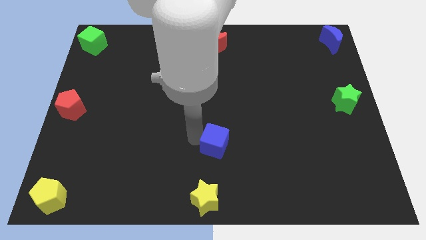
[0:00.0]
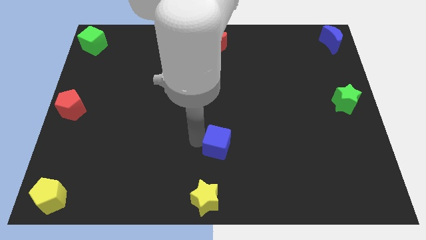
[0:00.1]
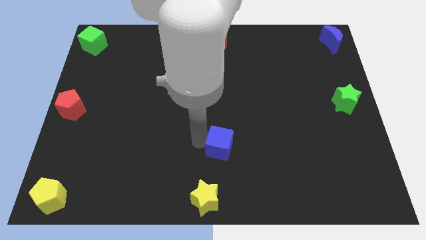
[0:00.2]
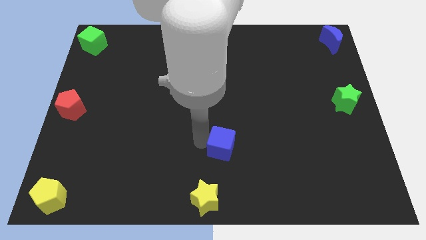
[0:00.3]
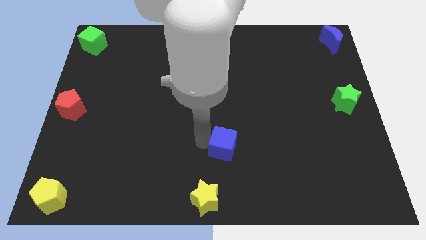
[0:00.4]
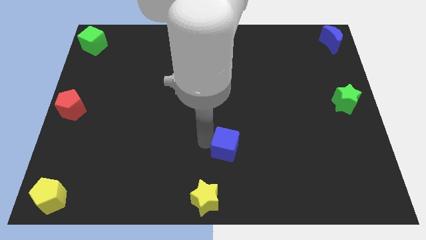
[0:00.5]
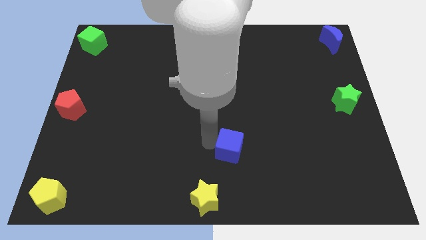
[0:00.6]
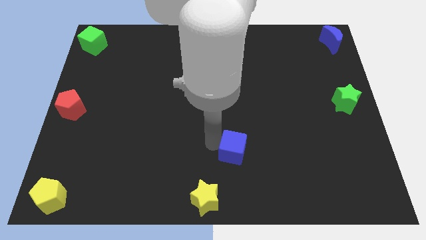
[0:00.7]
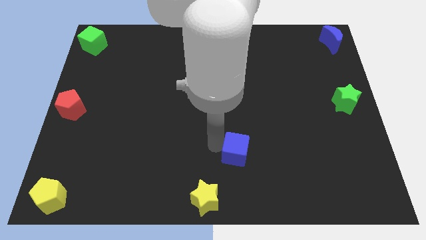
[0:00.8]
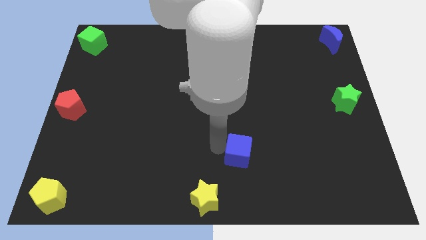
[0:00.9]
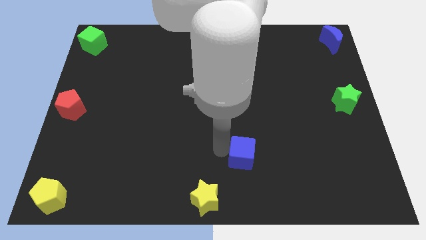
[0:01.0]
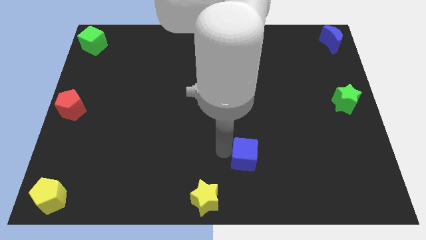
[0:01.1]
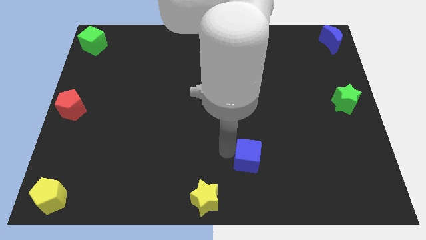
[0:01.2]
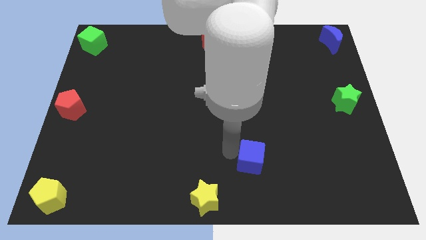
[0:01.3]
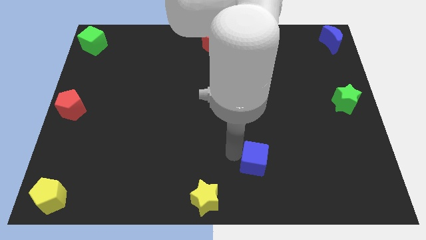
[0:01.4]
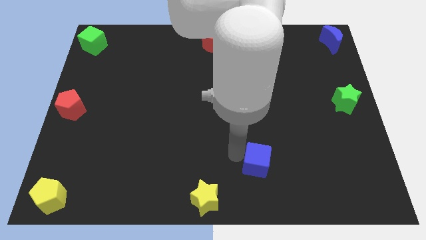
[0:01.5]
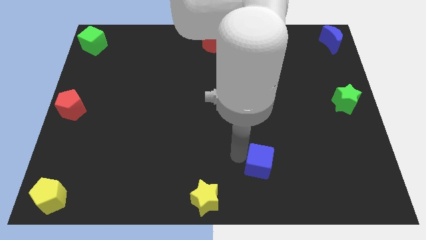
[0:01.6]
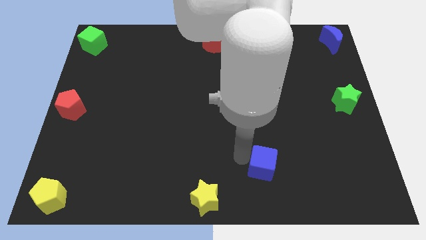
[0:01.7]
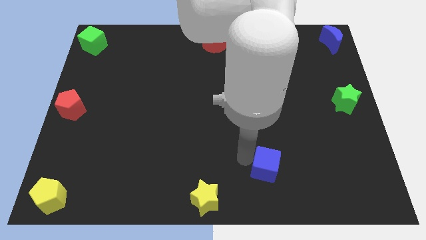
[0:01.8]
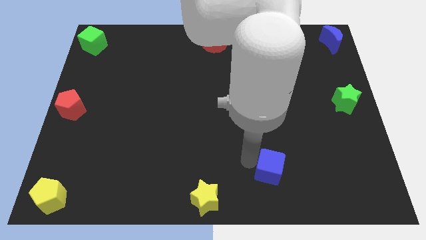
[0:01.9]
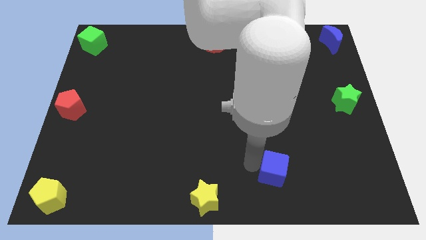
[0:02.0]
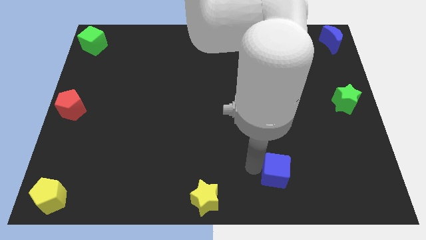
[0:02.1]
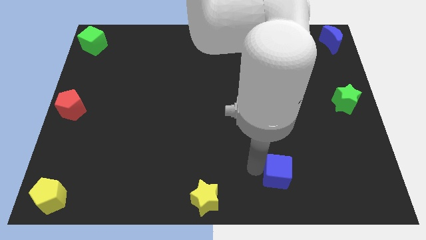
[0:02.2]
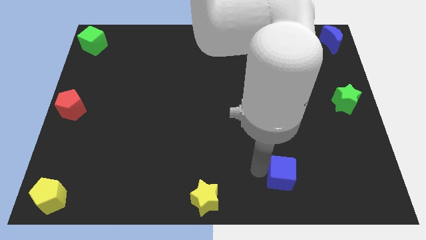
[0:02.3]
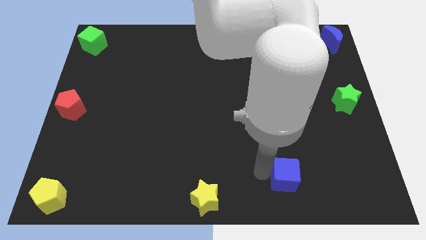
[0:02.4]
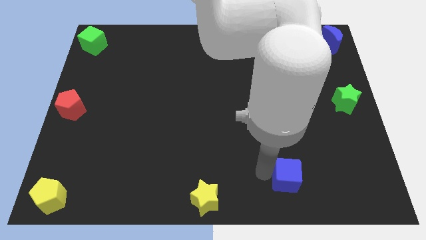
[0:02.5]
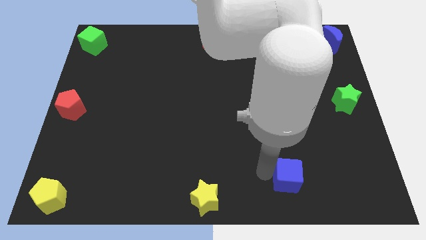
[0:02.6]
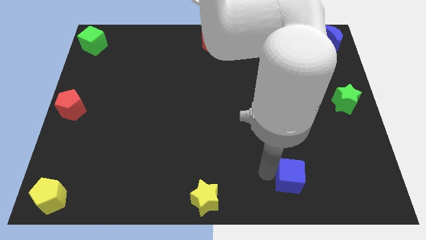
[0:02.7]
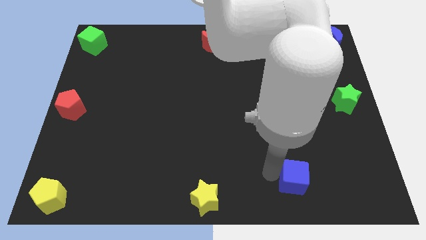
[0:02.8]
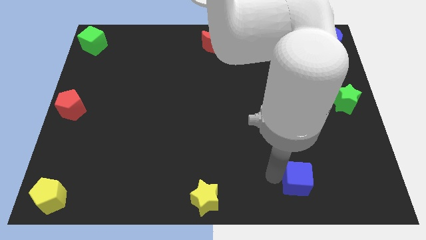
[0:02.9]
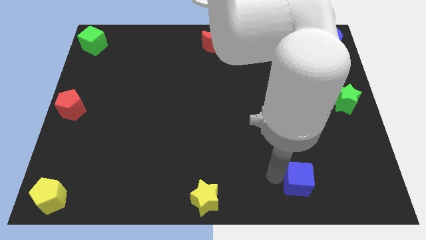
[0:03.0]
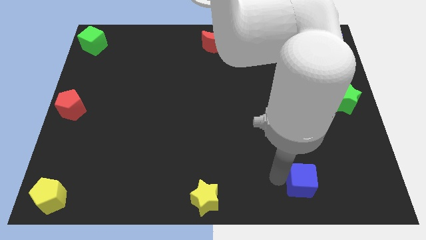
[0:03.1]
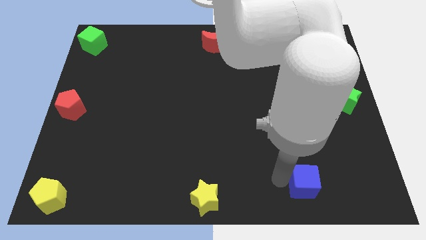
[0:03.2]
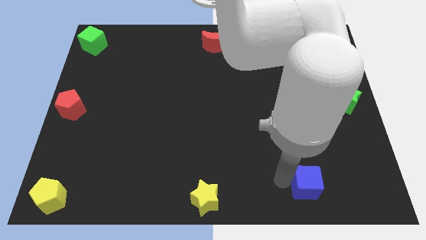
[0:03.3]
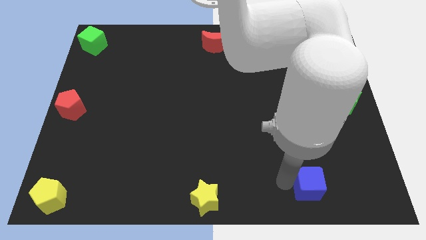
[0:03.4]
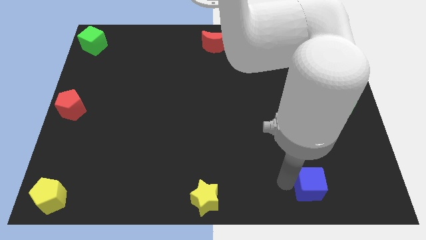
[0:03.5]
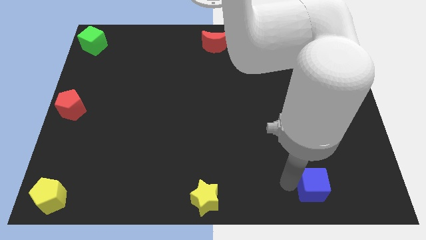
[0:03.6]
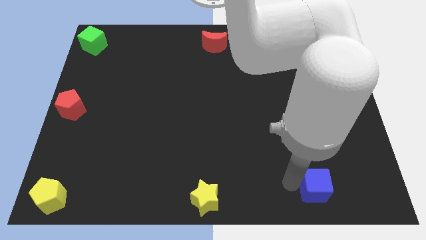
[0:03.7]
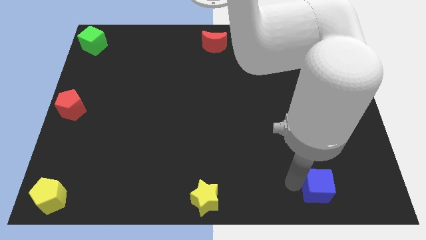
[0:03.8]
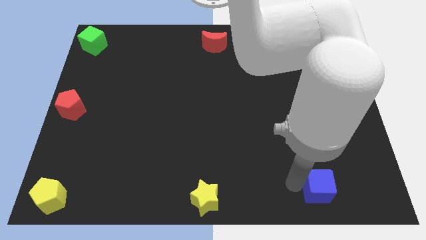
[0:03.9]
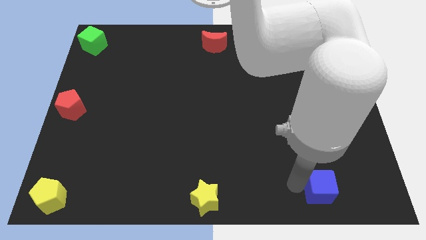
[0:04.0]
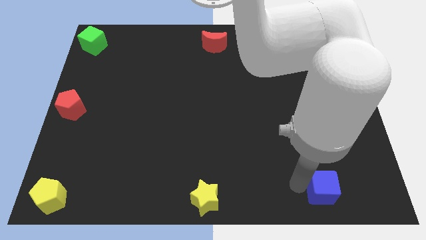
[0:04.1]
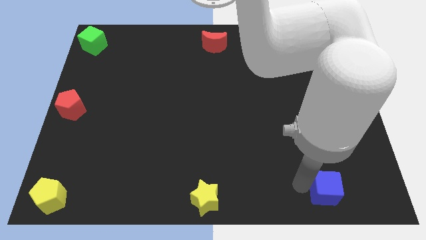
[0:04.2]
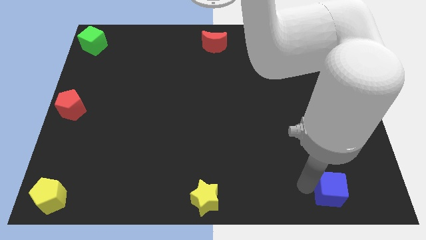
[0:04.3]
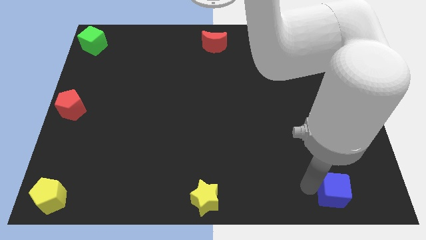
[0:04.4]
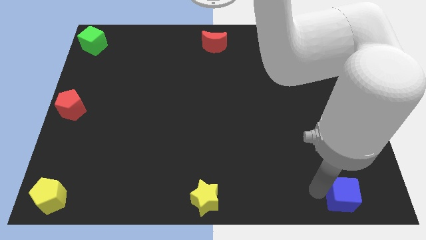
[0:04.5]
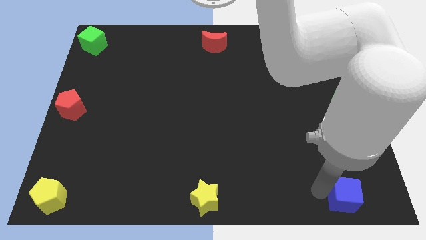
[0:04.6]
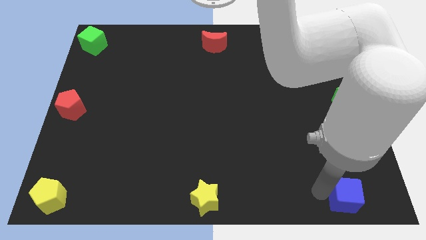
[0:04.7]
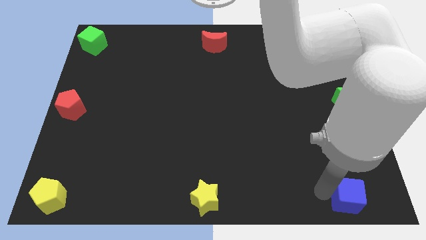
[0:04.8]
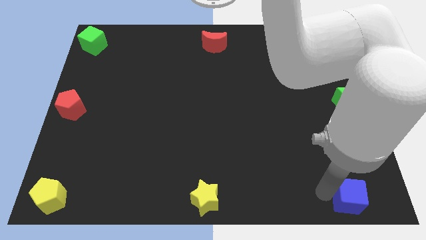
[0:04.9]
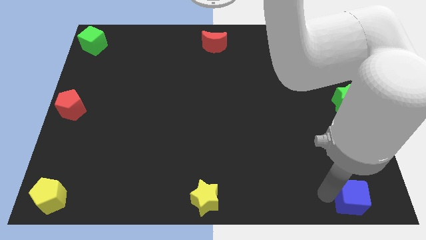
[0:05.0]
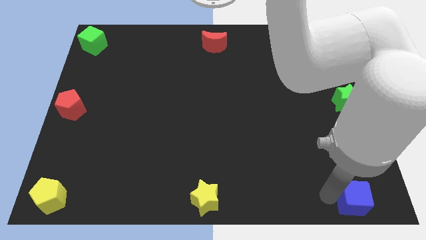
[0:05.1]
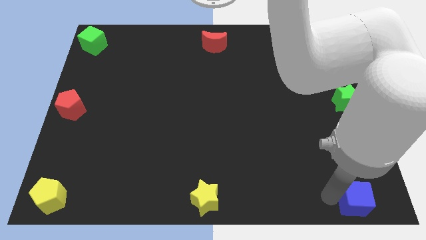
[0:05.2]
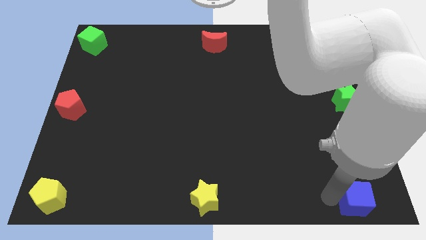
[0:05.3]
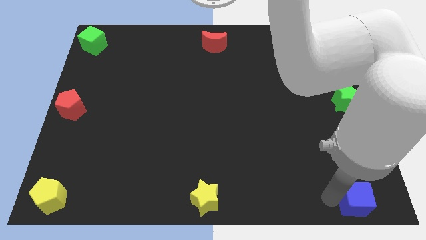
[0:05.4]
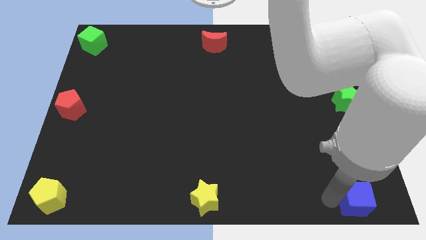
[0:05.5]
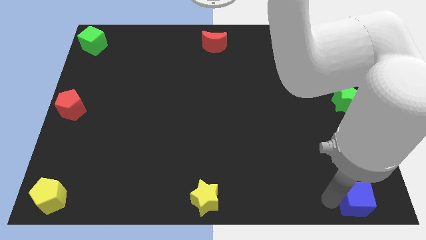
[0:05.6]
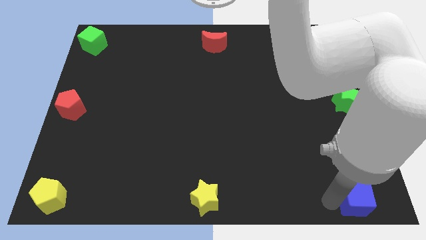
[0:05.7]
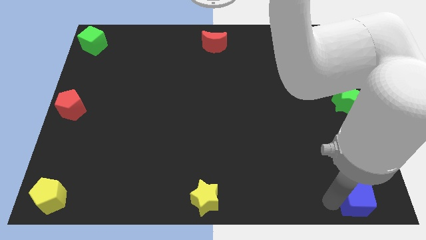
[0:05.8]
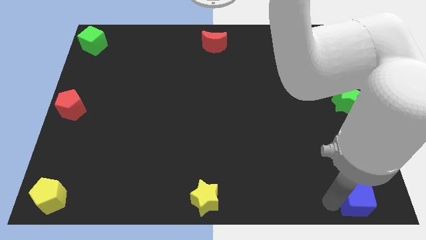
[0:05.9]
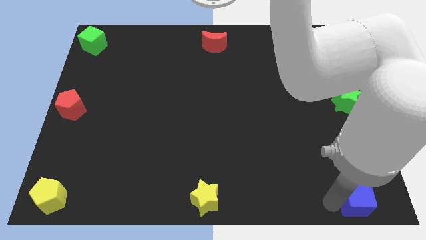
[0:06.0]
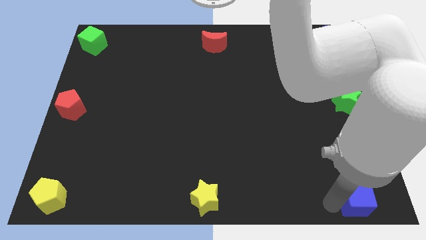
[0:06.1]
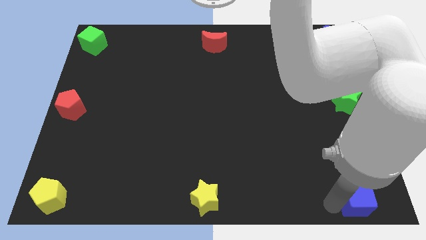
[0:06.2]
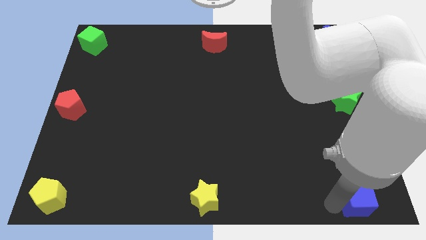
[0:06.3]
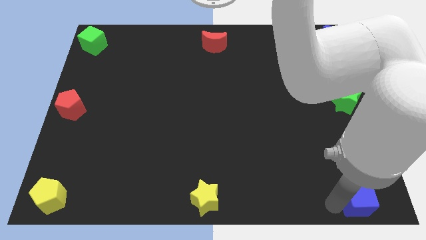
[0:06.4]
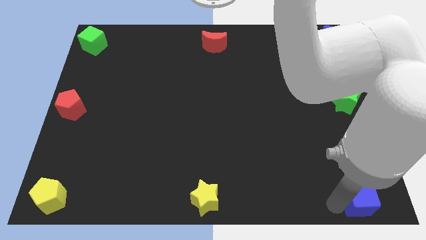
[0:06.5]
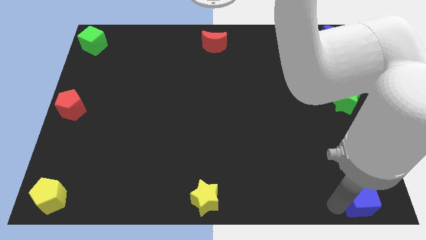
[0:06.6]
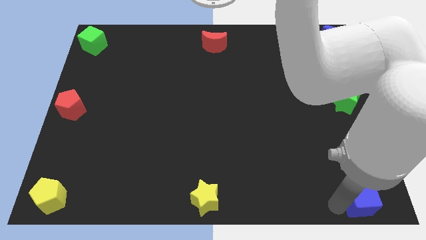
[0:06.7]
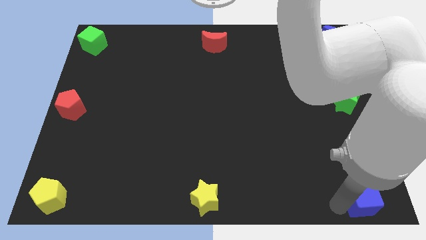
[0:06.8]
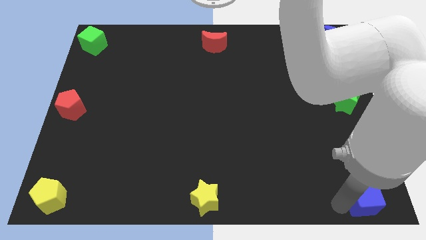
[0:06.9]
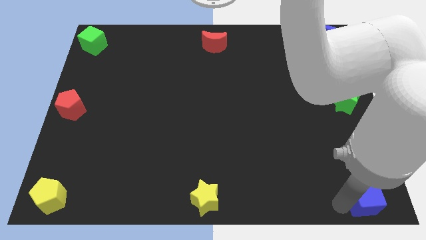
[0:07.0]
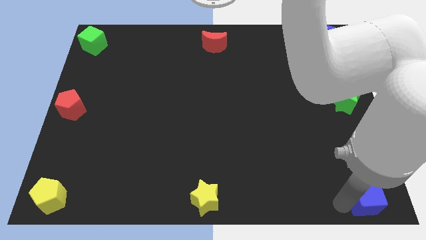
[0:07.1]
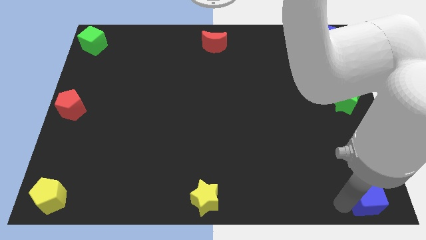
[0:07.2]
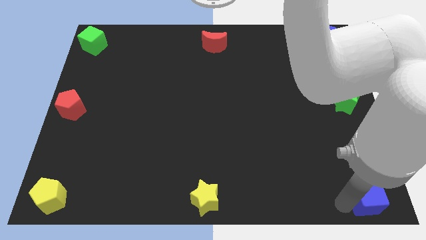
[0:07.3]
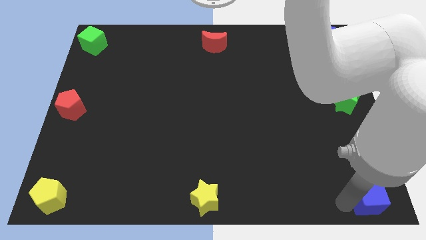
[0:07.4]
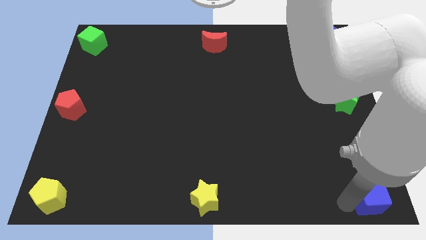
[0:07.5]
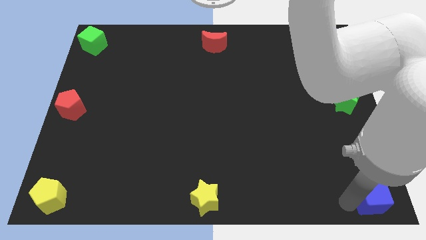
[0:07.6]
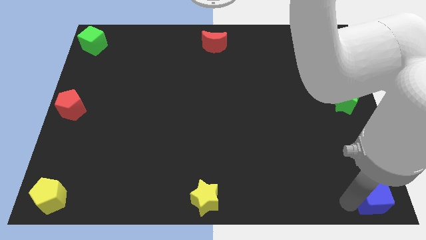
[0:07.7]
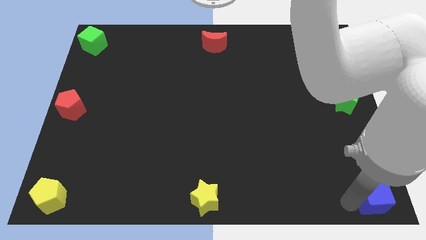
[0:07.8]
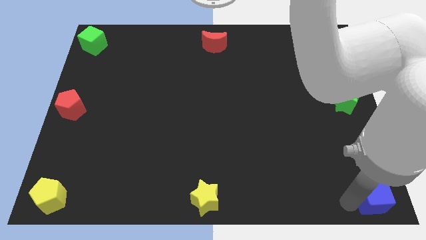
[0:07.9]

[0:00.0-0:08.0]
move the blue cube to the bottom right of the table

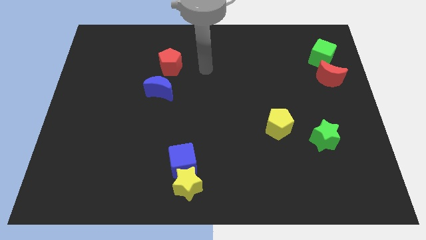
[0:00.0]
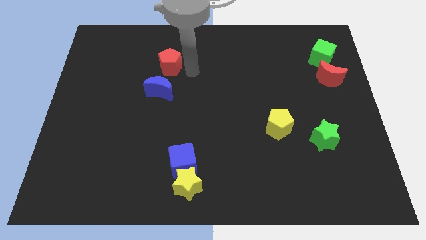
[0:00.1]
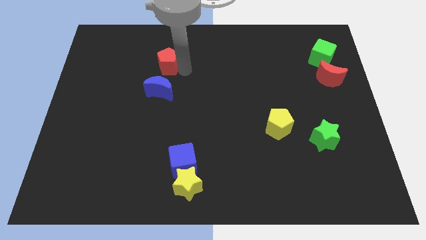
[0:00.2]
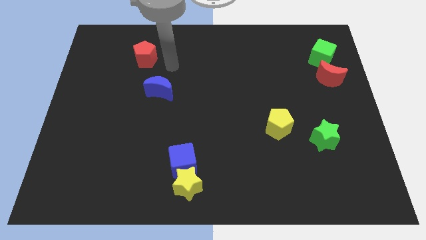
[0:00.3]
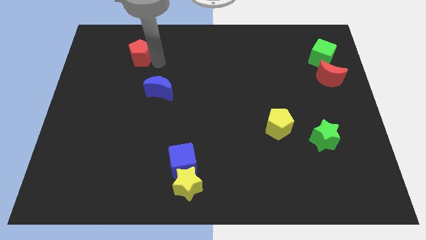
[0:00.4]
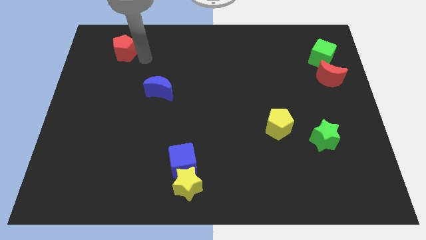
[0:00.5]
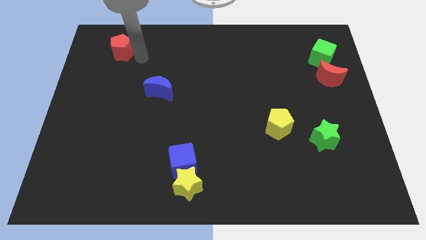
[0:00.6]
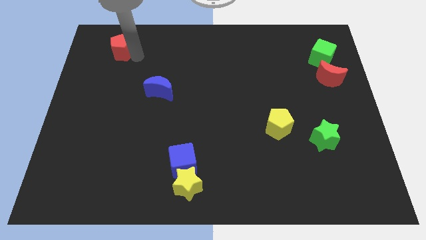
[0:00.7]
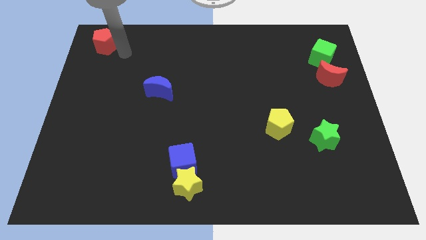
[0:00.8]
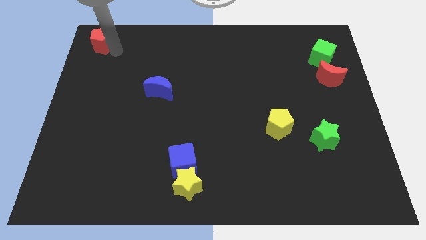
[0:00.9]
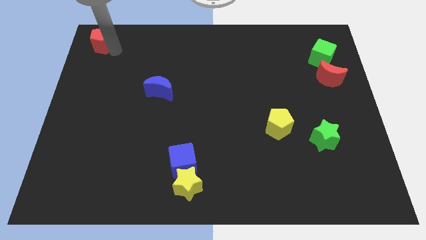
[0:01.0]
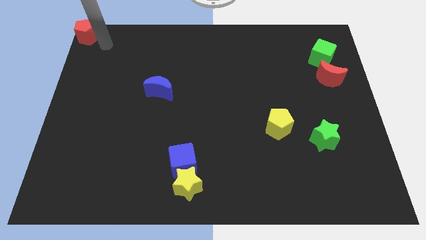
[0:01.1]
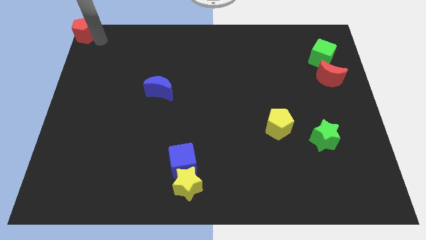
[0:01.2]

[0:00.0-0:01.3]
push the red pentagon to the top left to the board
